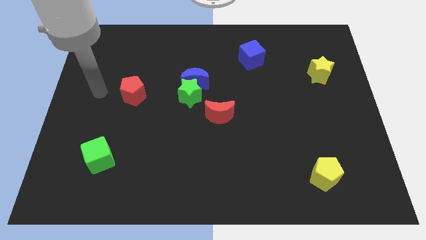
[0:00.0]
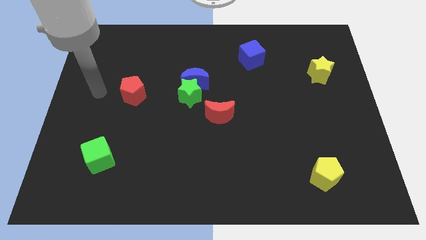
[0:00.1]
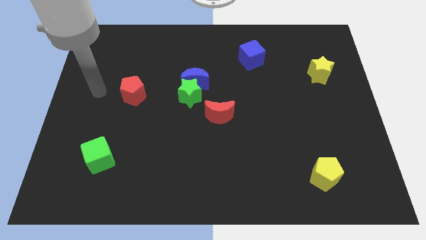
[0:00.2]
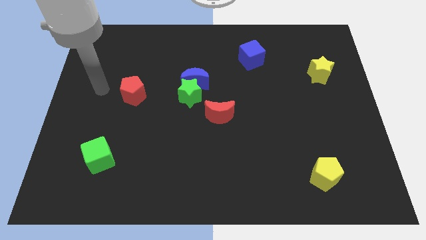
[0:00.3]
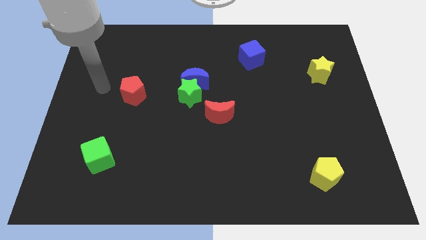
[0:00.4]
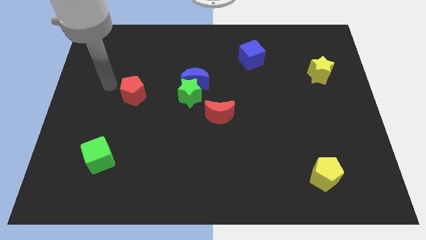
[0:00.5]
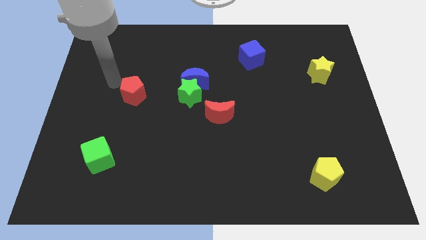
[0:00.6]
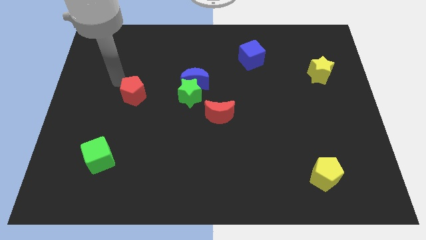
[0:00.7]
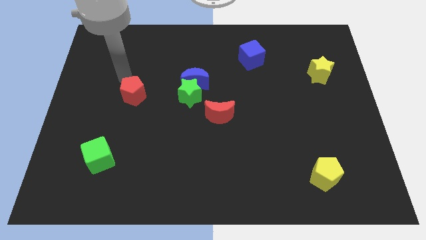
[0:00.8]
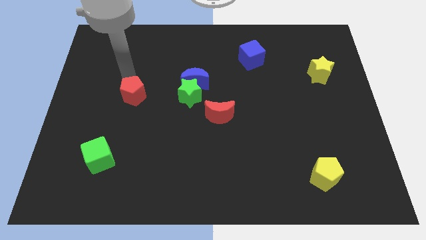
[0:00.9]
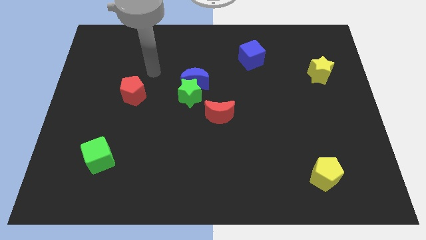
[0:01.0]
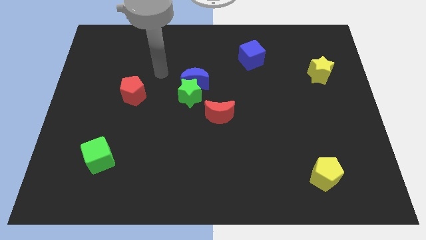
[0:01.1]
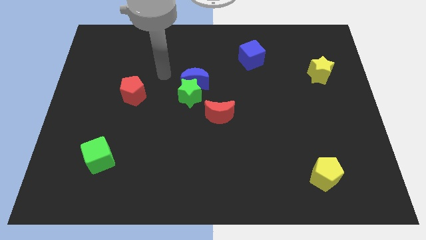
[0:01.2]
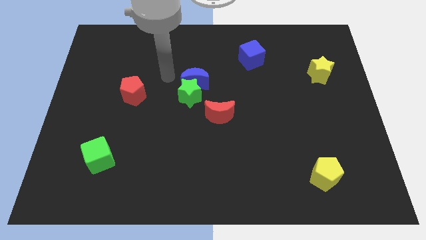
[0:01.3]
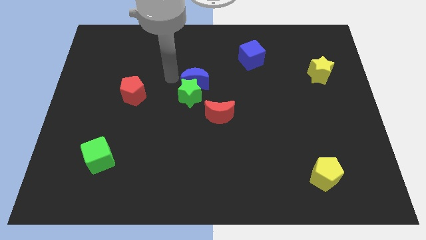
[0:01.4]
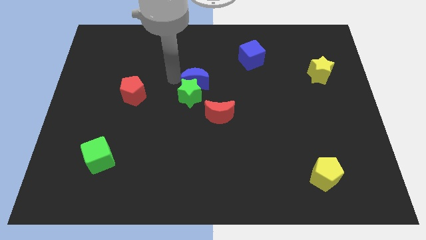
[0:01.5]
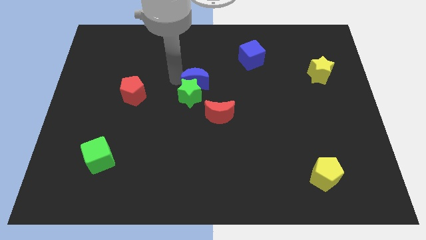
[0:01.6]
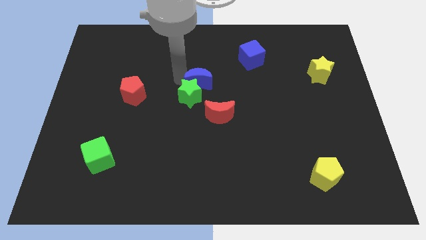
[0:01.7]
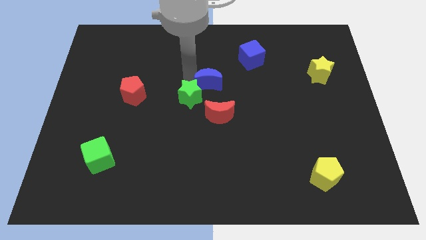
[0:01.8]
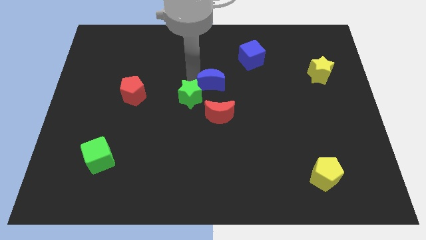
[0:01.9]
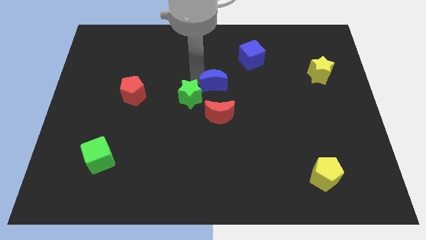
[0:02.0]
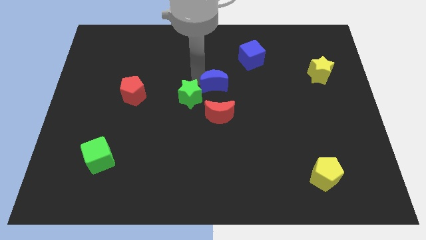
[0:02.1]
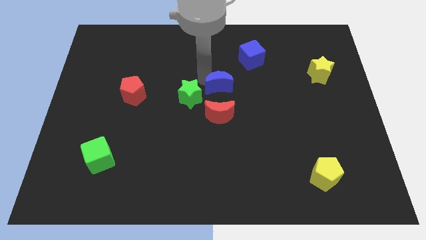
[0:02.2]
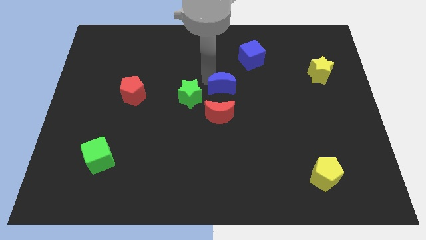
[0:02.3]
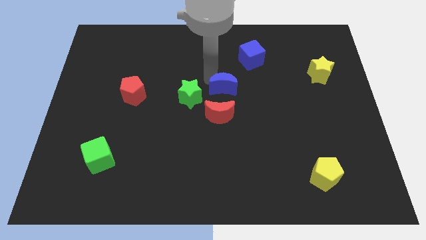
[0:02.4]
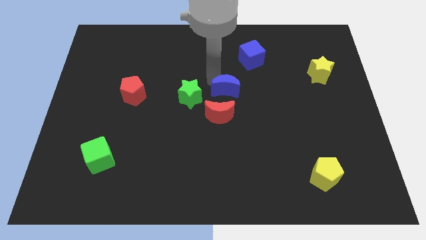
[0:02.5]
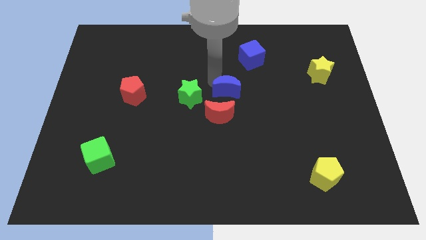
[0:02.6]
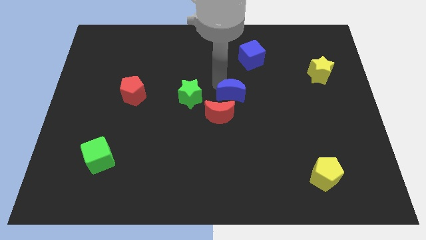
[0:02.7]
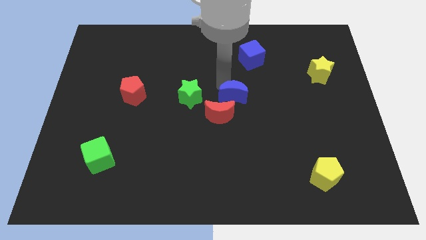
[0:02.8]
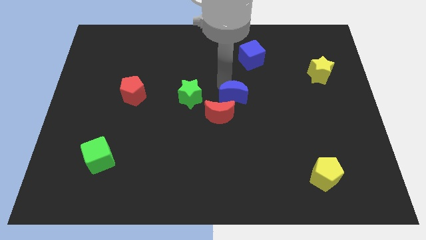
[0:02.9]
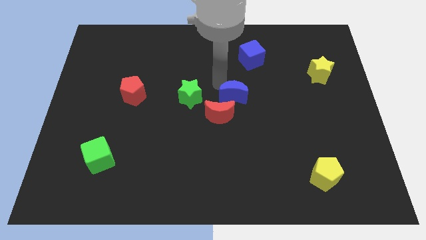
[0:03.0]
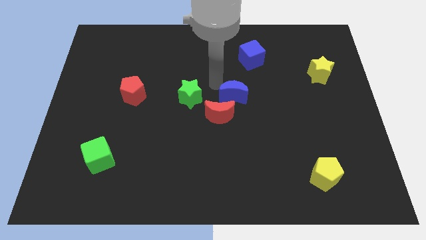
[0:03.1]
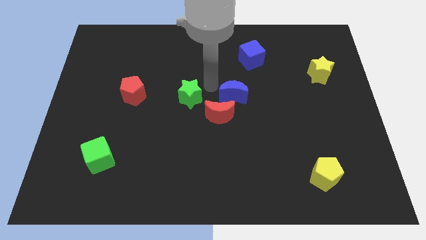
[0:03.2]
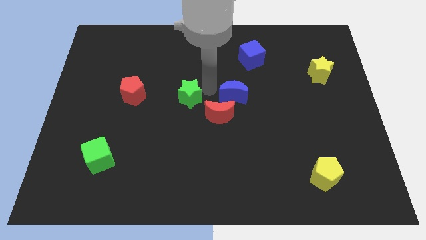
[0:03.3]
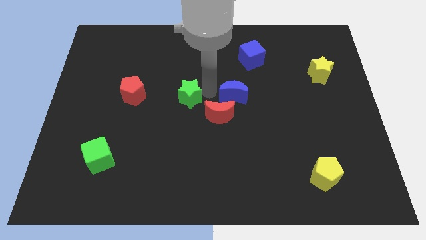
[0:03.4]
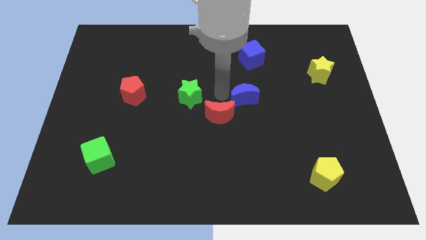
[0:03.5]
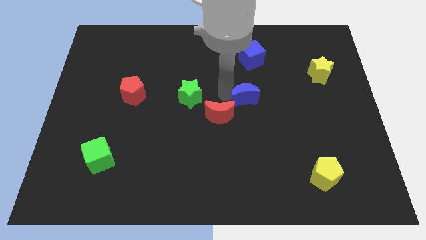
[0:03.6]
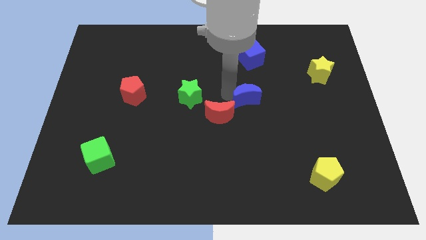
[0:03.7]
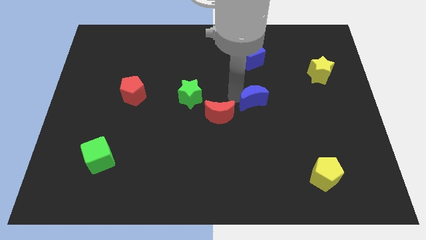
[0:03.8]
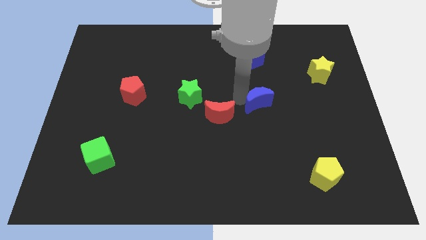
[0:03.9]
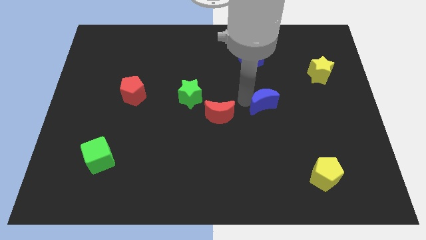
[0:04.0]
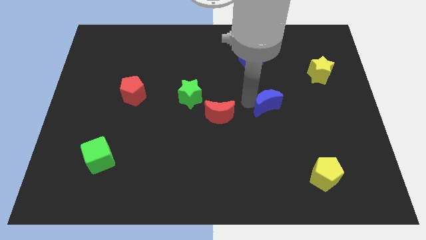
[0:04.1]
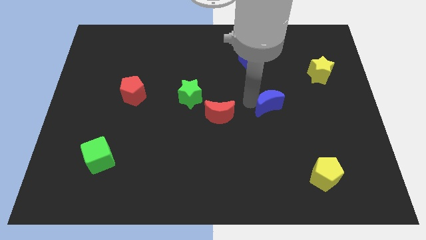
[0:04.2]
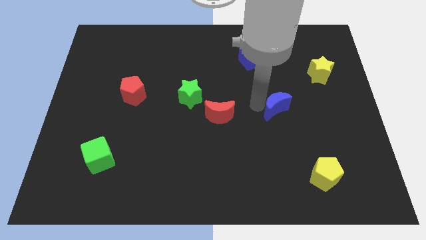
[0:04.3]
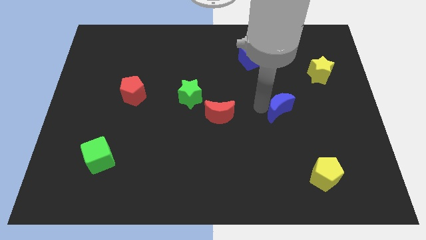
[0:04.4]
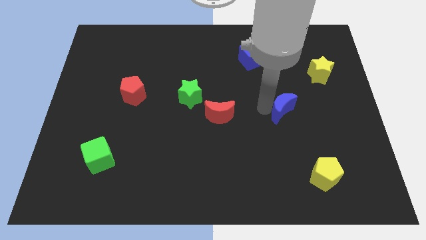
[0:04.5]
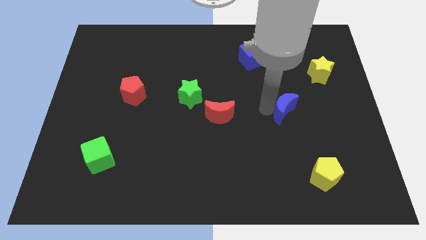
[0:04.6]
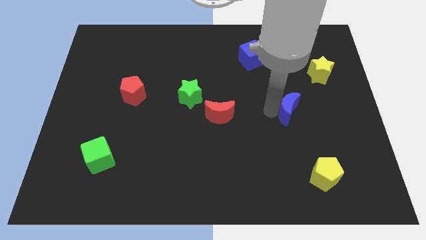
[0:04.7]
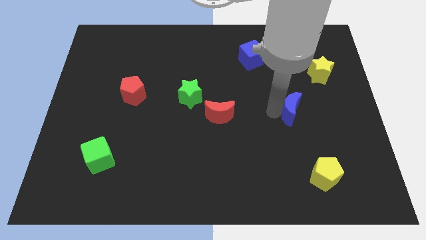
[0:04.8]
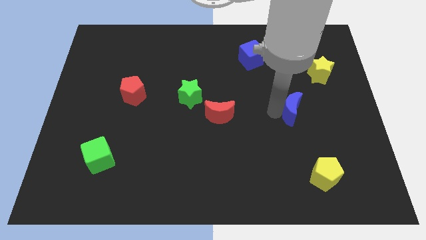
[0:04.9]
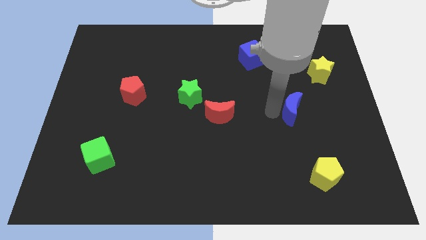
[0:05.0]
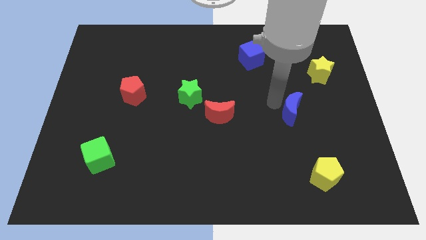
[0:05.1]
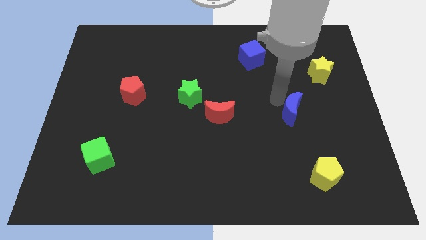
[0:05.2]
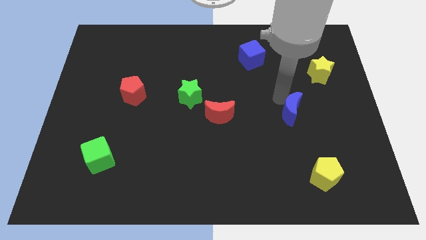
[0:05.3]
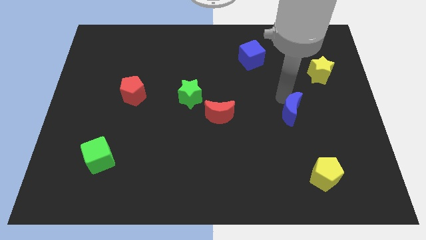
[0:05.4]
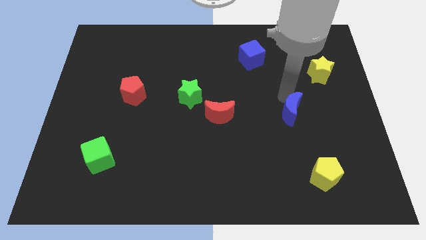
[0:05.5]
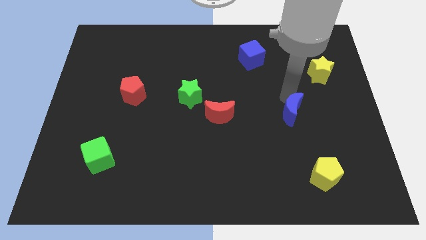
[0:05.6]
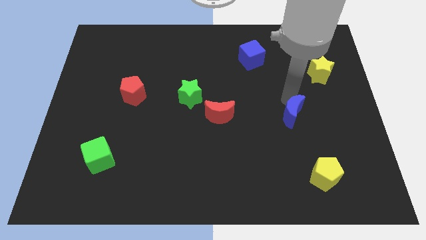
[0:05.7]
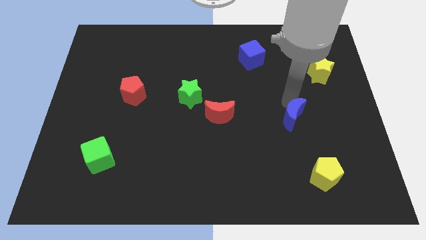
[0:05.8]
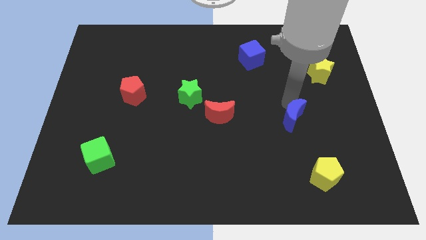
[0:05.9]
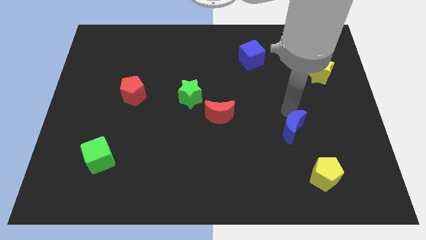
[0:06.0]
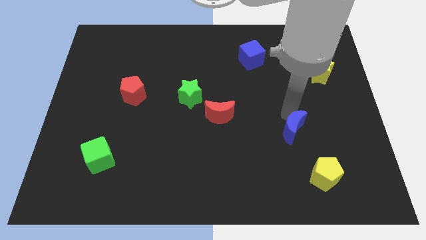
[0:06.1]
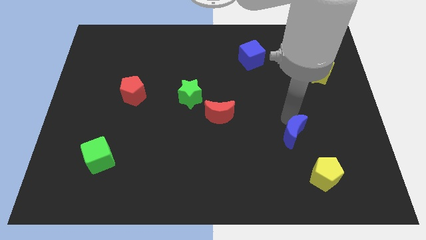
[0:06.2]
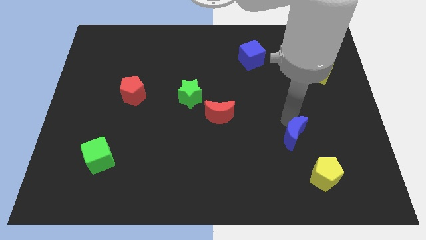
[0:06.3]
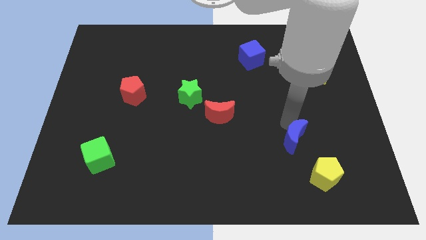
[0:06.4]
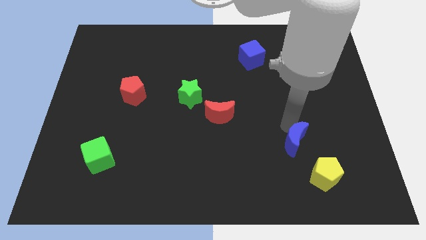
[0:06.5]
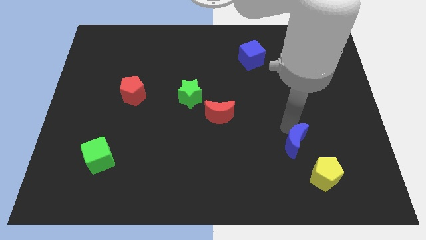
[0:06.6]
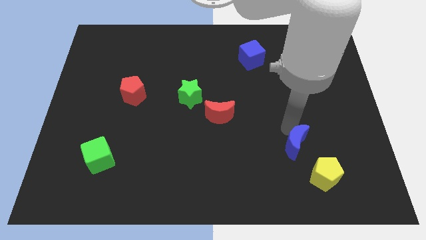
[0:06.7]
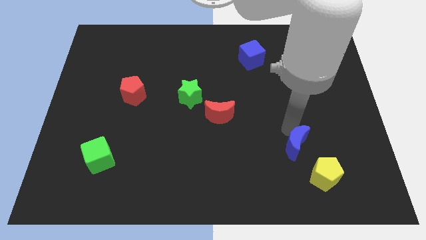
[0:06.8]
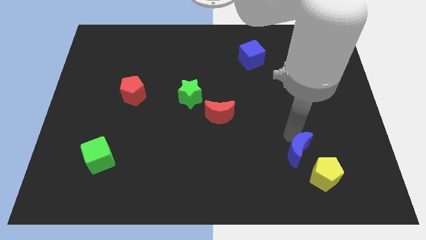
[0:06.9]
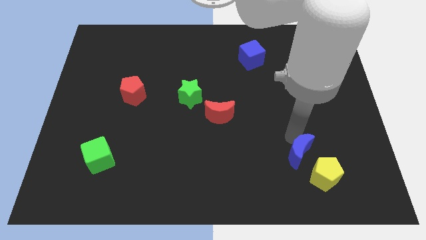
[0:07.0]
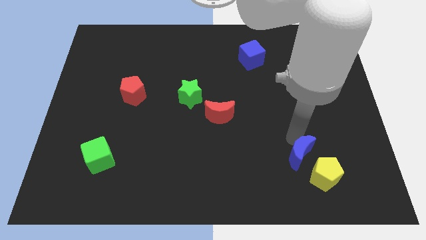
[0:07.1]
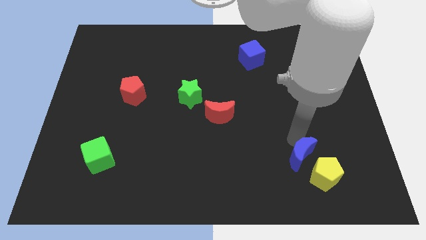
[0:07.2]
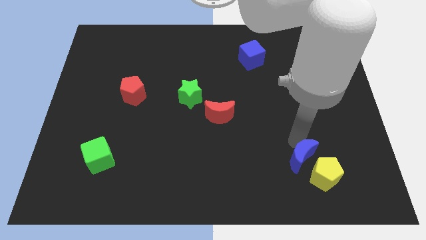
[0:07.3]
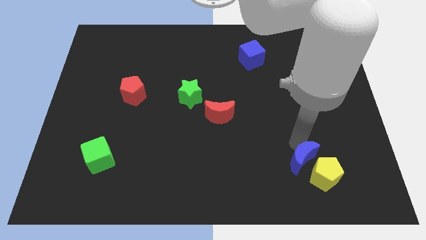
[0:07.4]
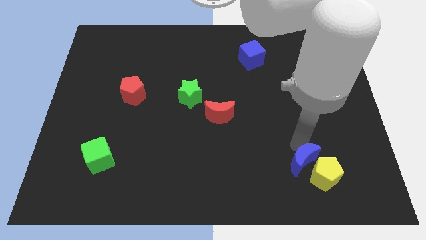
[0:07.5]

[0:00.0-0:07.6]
move the blue moon to the yellow pentagon

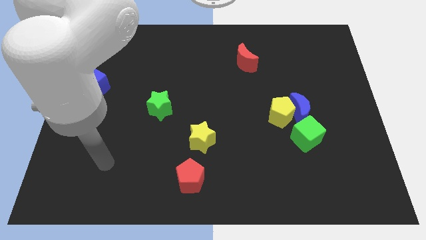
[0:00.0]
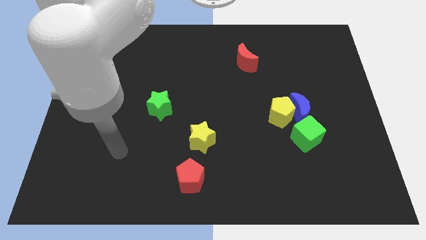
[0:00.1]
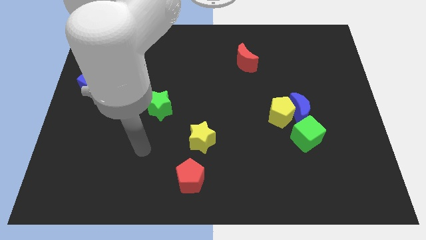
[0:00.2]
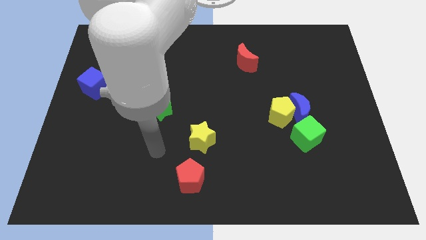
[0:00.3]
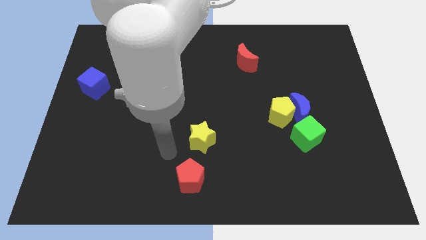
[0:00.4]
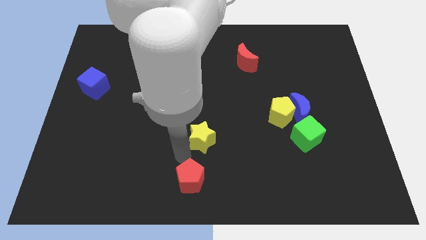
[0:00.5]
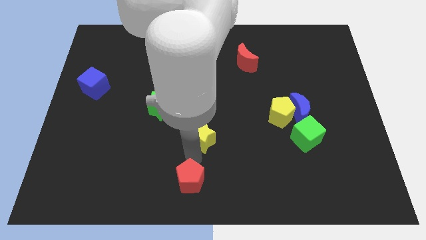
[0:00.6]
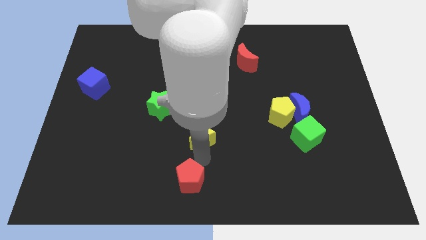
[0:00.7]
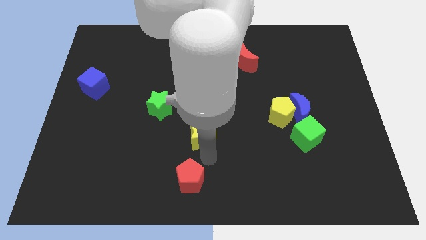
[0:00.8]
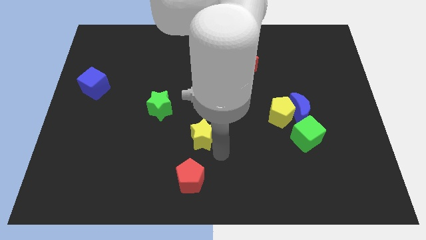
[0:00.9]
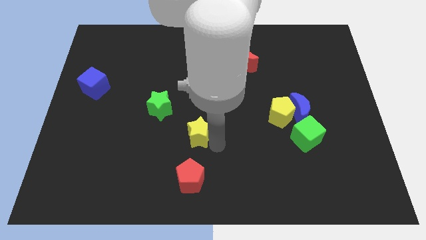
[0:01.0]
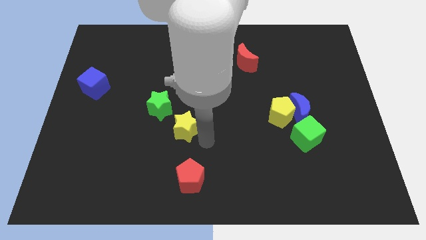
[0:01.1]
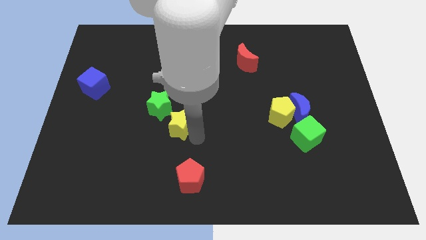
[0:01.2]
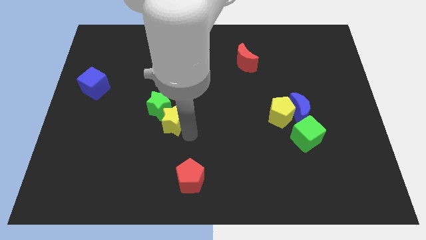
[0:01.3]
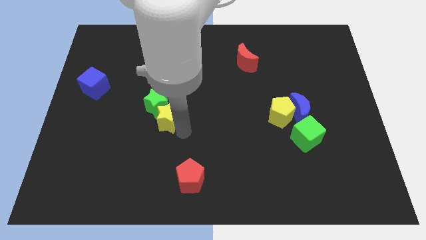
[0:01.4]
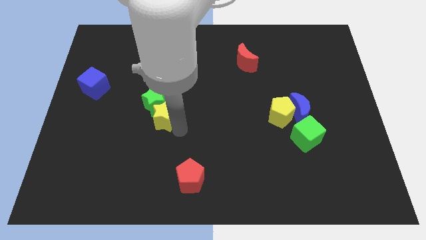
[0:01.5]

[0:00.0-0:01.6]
slide the yellow star close to the green star
